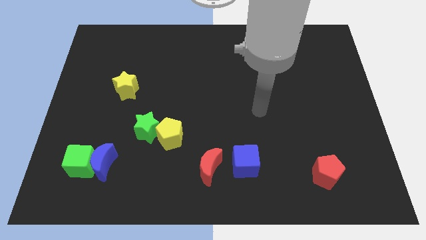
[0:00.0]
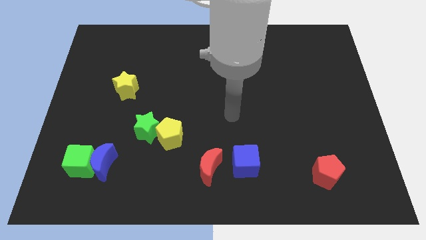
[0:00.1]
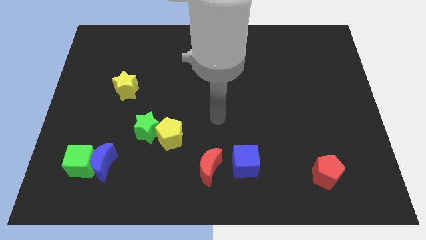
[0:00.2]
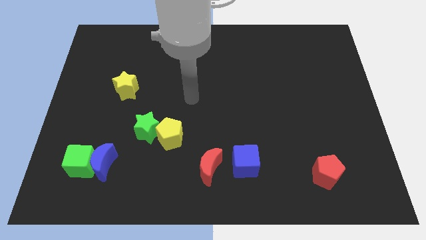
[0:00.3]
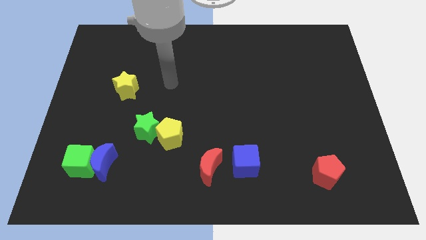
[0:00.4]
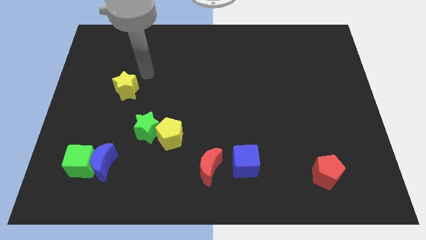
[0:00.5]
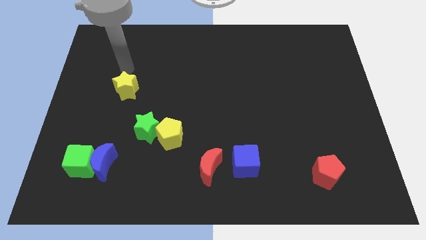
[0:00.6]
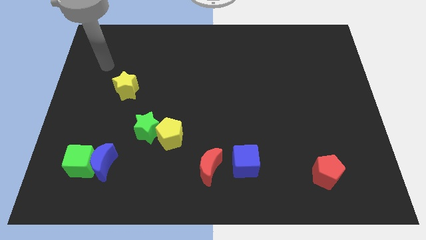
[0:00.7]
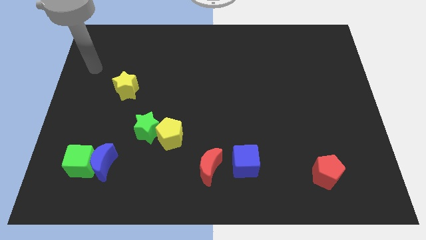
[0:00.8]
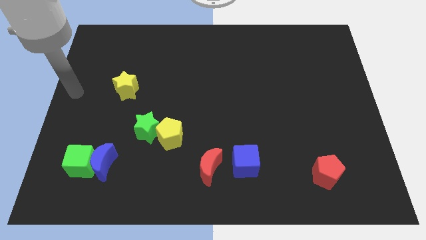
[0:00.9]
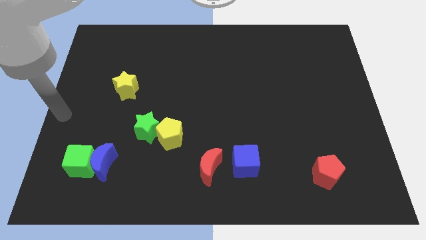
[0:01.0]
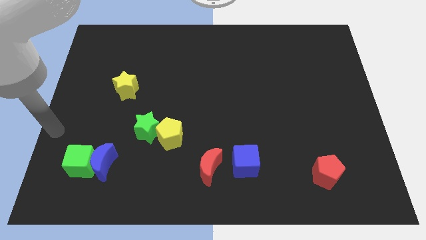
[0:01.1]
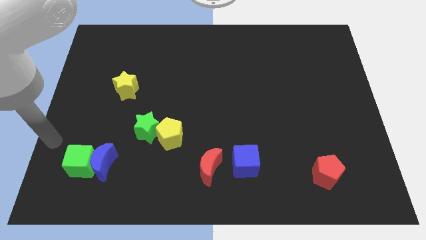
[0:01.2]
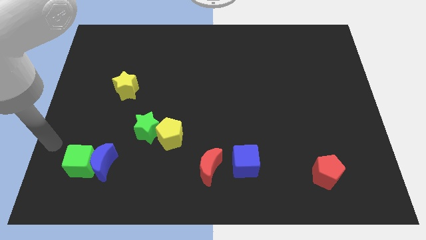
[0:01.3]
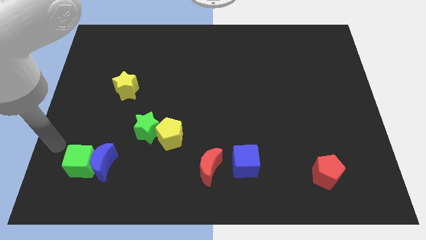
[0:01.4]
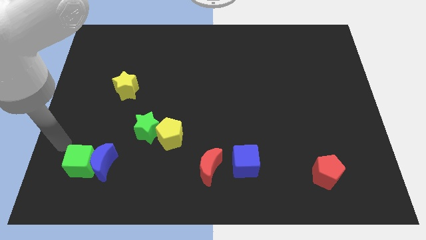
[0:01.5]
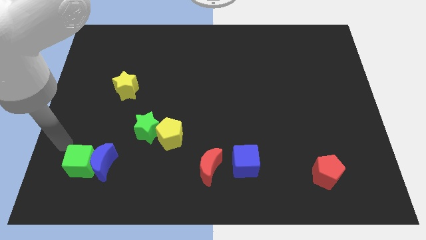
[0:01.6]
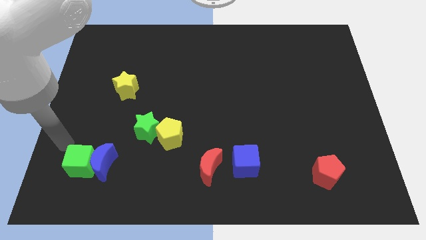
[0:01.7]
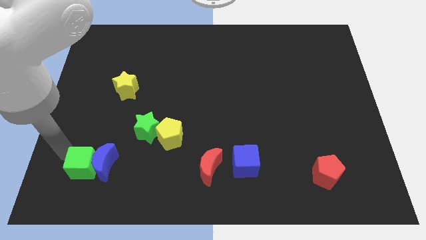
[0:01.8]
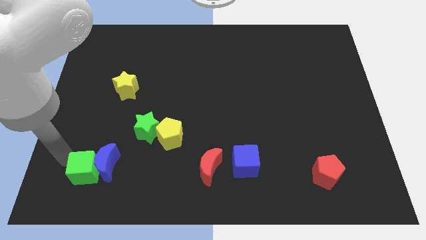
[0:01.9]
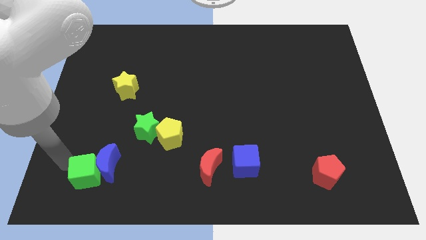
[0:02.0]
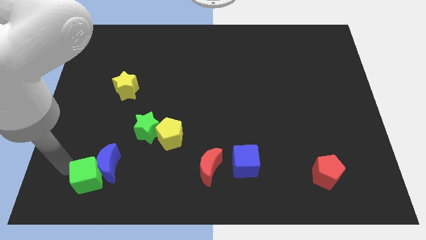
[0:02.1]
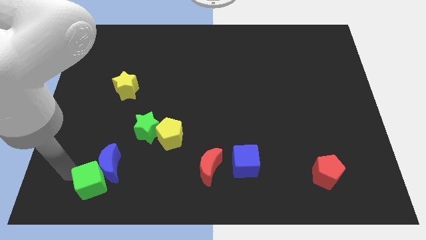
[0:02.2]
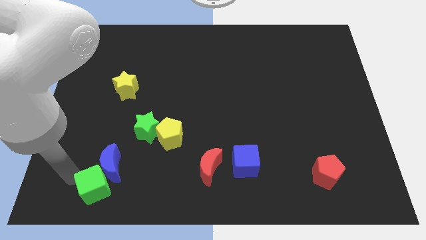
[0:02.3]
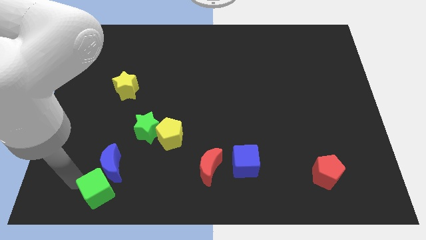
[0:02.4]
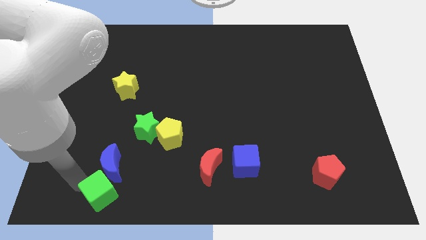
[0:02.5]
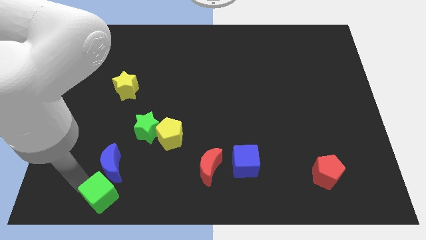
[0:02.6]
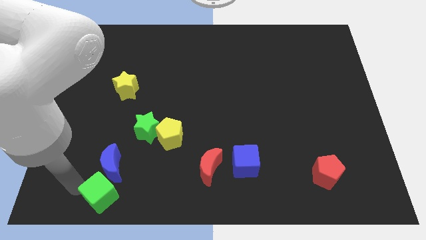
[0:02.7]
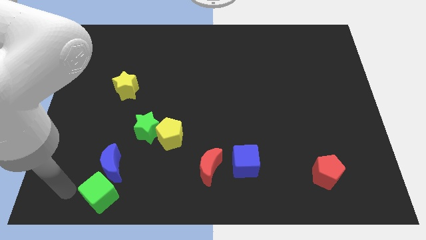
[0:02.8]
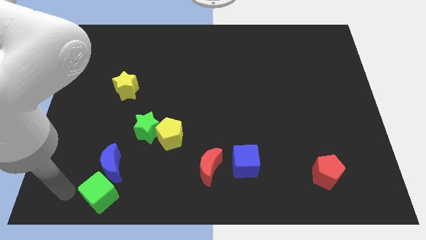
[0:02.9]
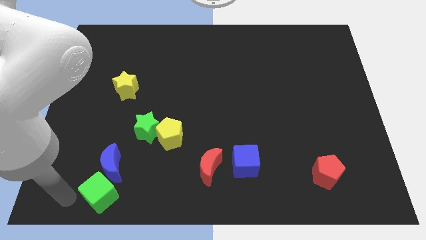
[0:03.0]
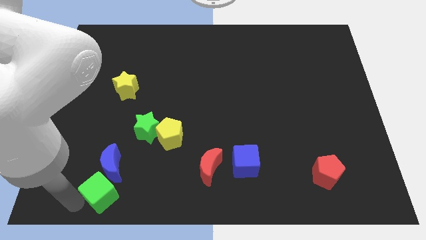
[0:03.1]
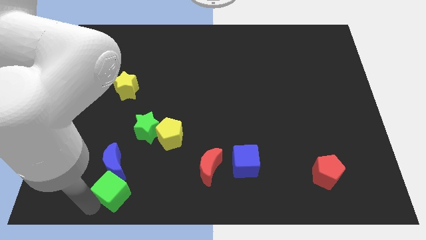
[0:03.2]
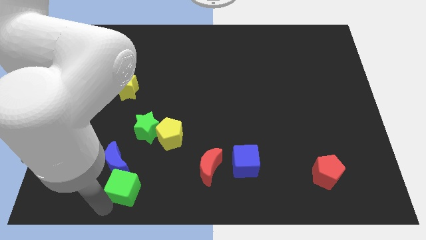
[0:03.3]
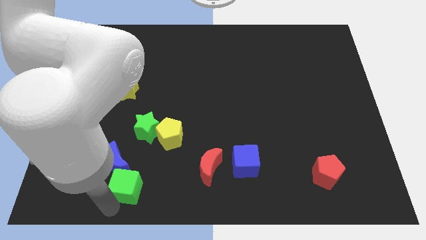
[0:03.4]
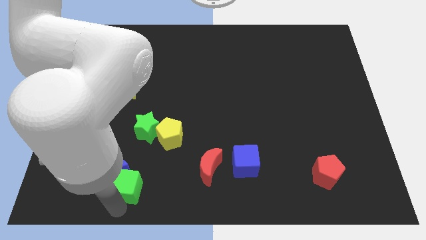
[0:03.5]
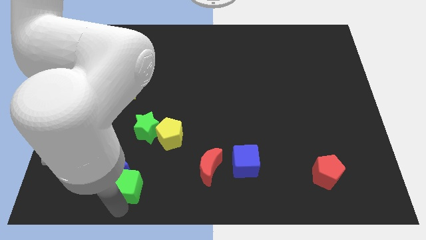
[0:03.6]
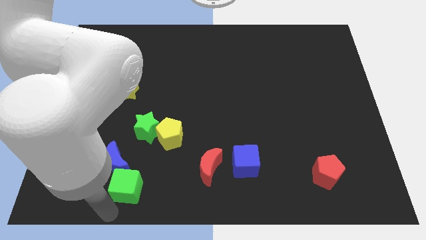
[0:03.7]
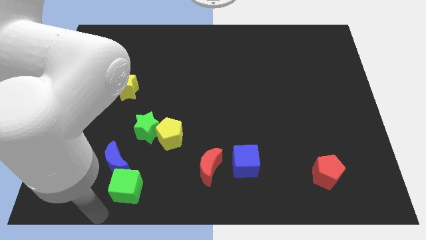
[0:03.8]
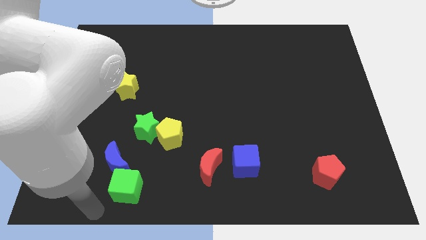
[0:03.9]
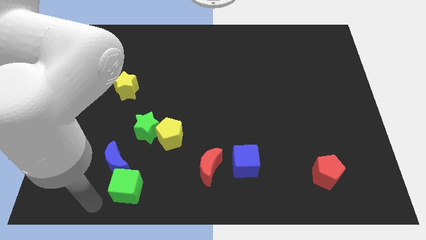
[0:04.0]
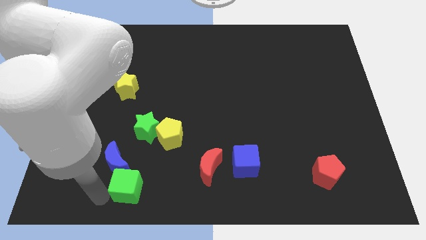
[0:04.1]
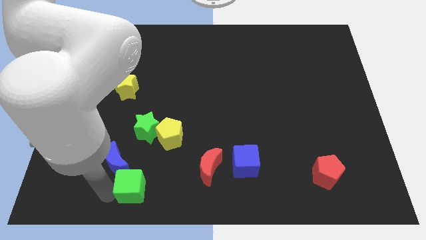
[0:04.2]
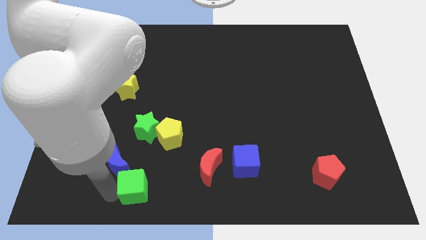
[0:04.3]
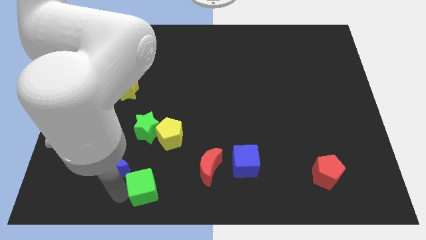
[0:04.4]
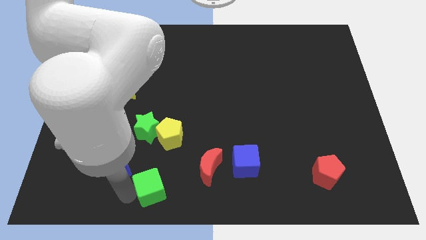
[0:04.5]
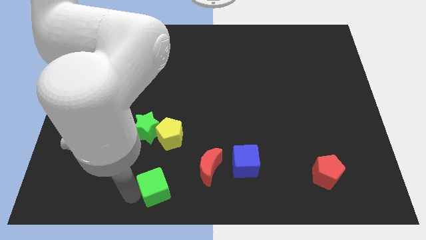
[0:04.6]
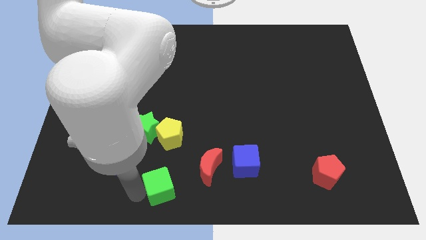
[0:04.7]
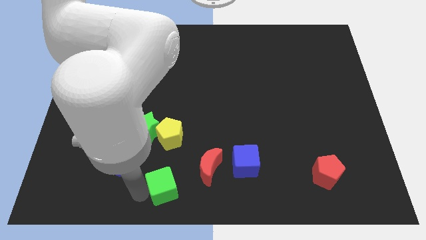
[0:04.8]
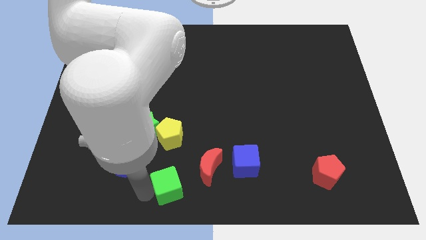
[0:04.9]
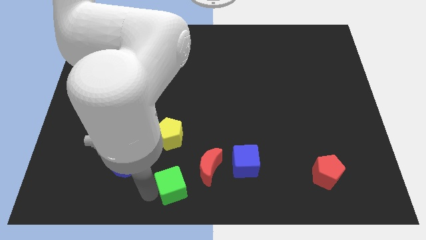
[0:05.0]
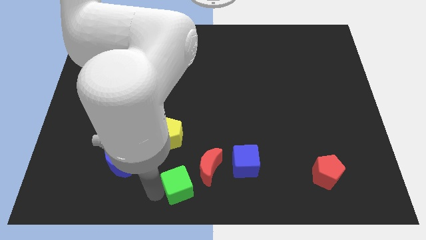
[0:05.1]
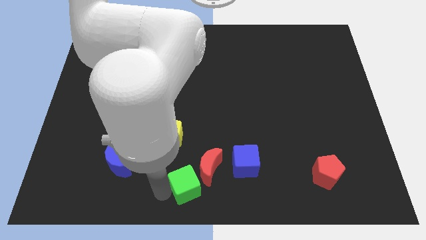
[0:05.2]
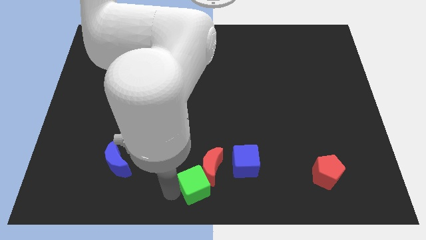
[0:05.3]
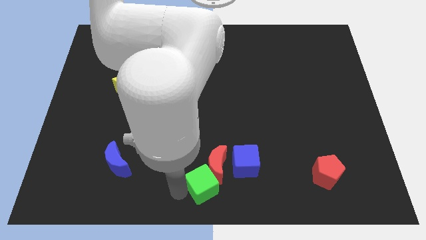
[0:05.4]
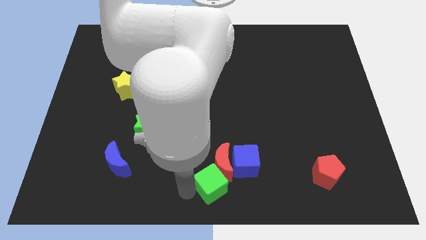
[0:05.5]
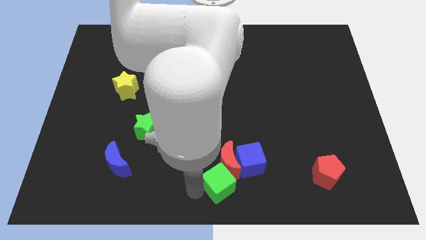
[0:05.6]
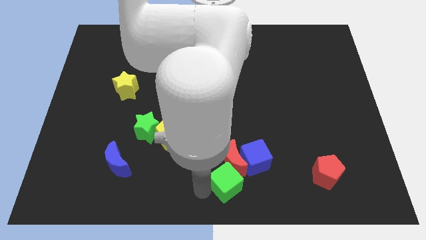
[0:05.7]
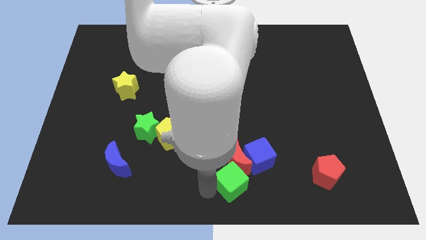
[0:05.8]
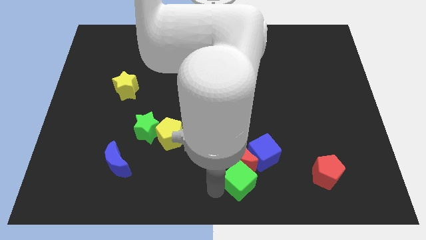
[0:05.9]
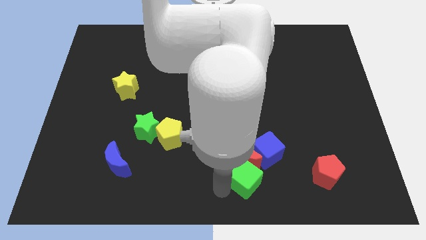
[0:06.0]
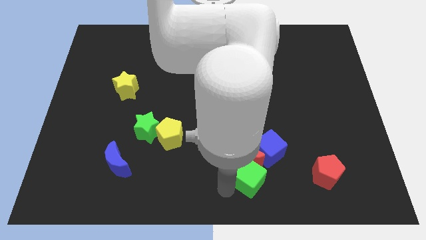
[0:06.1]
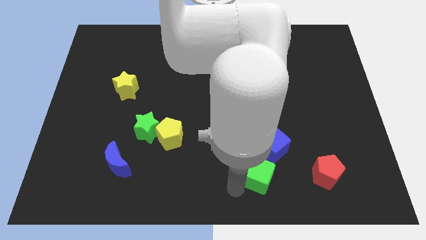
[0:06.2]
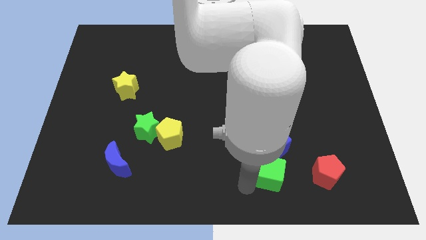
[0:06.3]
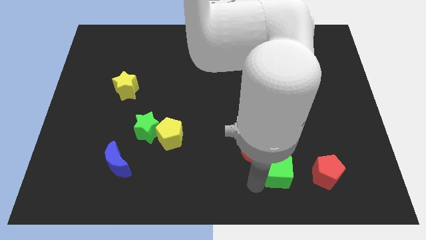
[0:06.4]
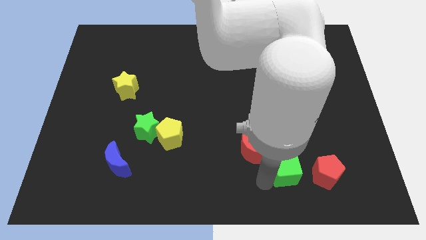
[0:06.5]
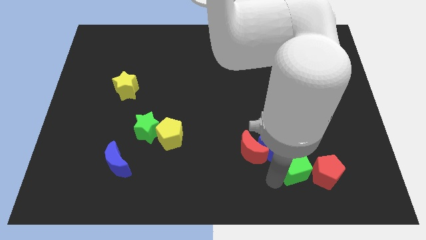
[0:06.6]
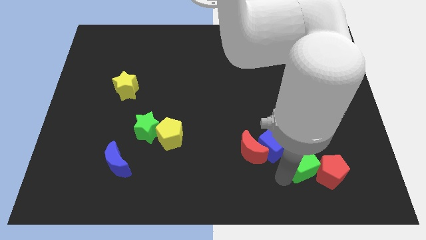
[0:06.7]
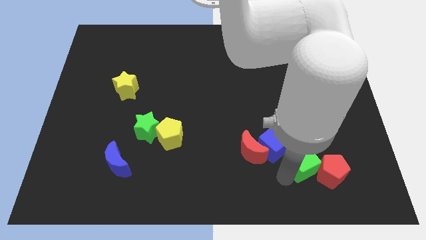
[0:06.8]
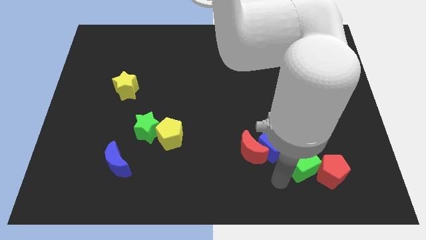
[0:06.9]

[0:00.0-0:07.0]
push the green cube next to the red pentagon

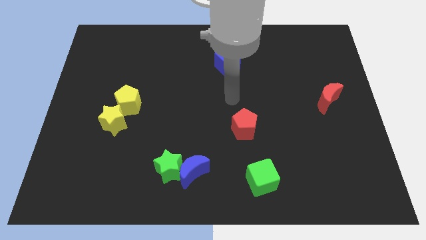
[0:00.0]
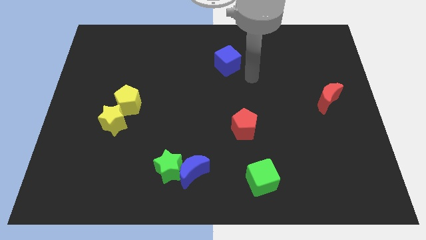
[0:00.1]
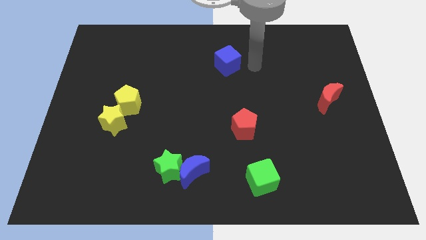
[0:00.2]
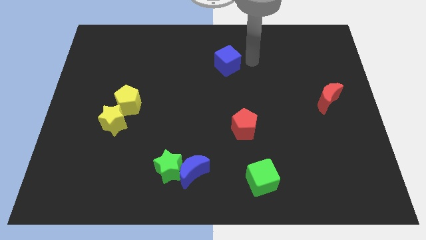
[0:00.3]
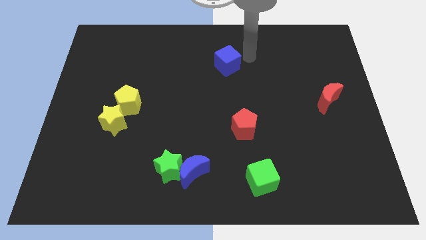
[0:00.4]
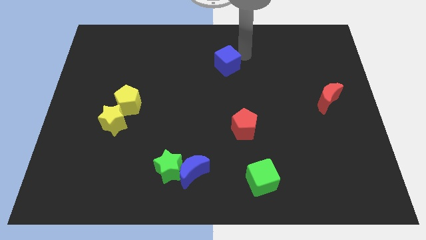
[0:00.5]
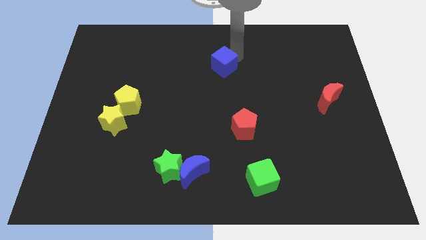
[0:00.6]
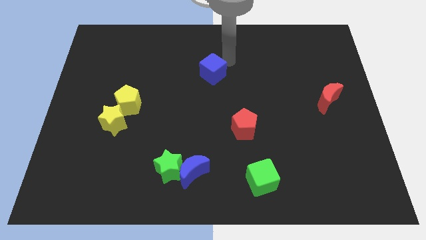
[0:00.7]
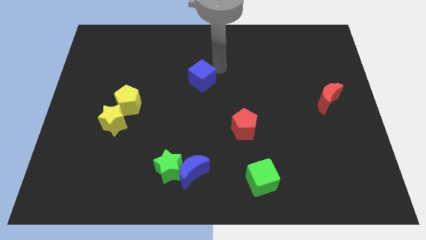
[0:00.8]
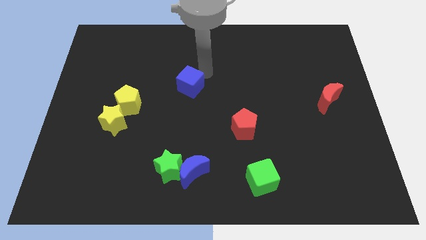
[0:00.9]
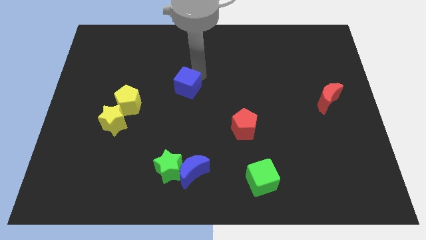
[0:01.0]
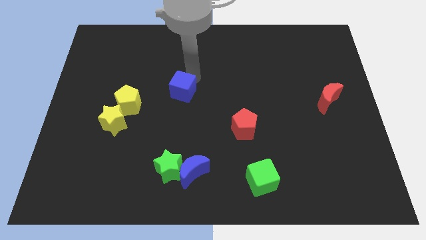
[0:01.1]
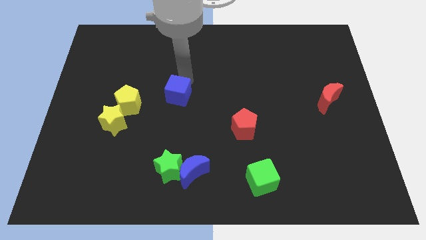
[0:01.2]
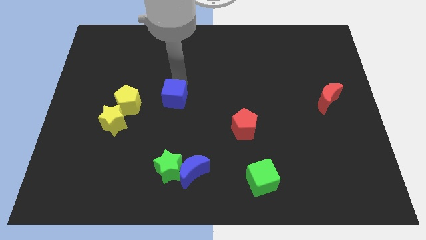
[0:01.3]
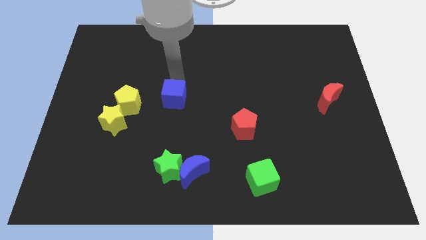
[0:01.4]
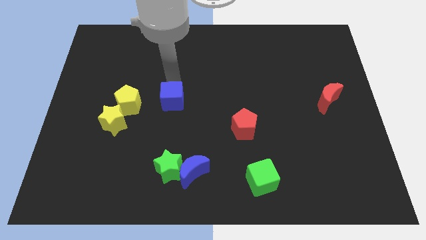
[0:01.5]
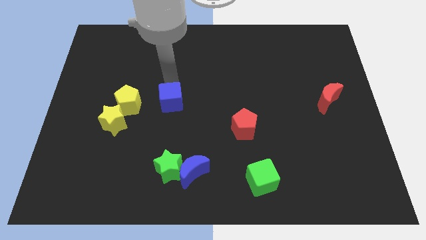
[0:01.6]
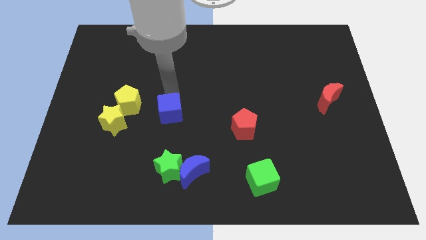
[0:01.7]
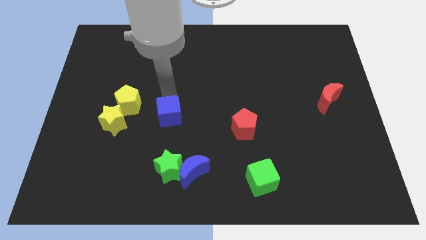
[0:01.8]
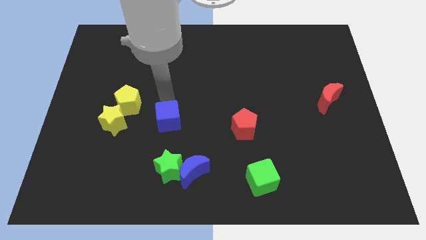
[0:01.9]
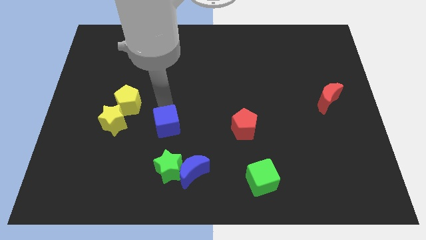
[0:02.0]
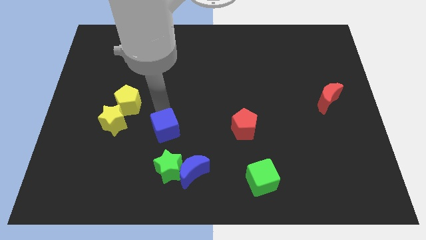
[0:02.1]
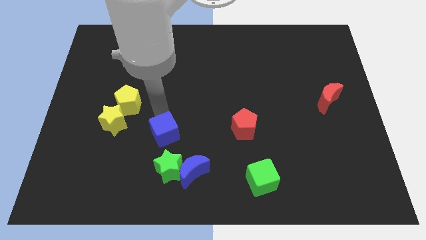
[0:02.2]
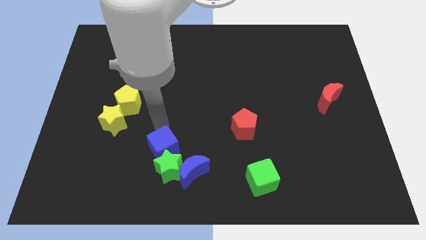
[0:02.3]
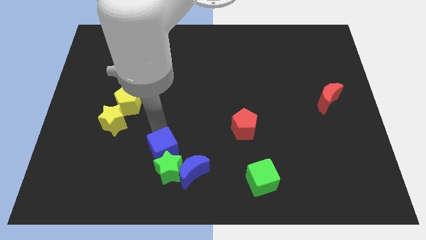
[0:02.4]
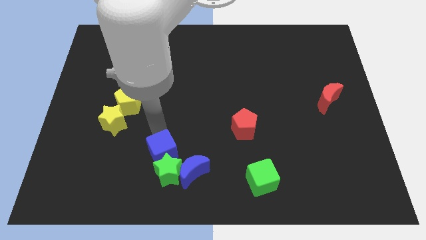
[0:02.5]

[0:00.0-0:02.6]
slide the blue cube towards the green star
